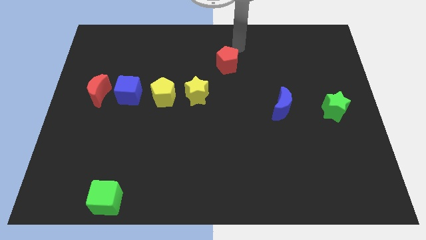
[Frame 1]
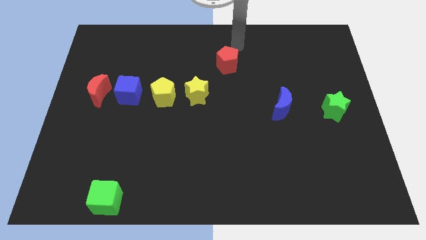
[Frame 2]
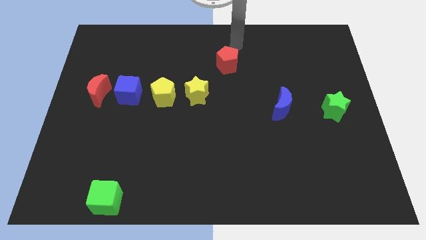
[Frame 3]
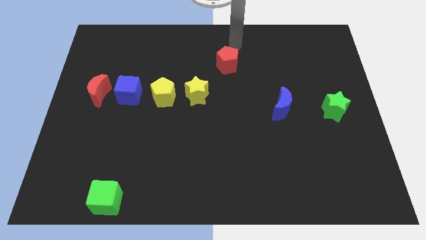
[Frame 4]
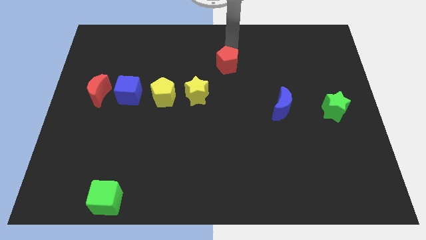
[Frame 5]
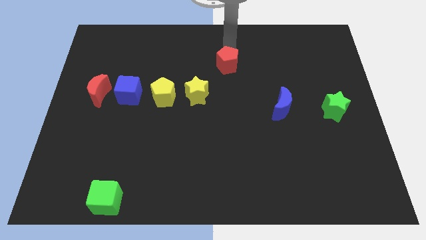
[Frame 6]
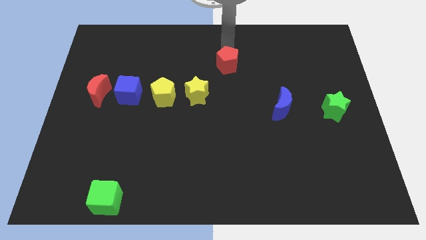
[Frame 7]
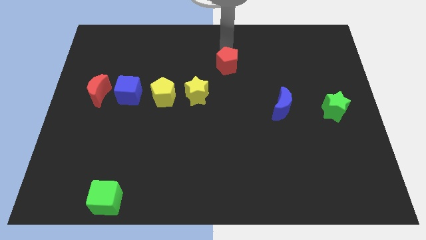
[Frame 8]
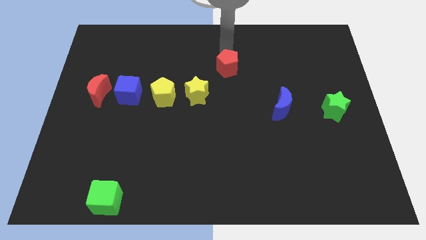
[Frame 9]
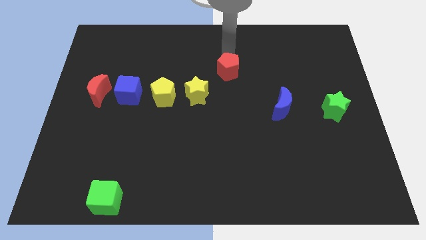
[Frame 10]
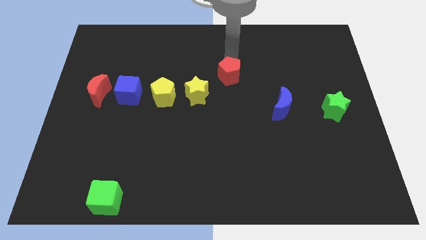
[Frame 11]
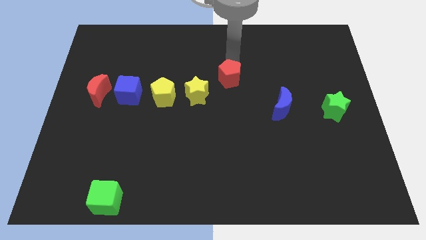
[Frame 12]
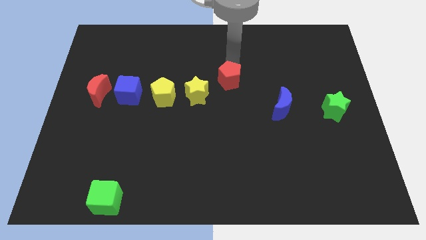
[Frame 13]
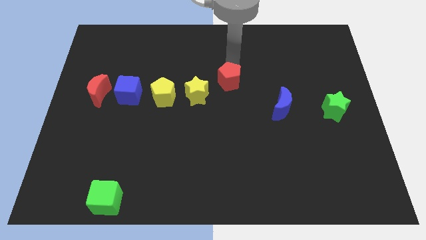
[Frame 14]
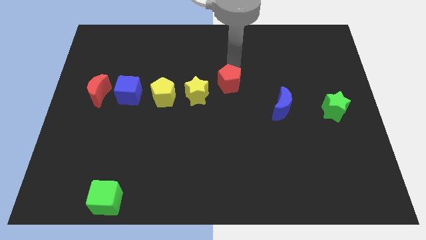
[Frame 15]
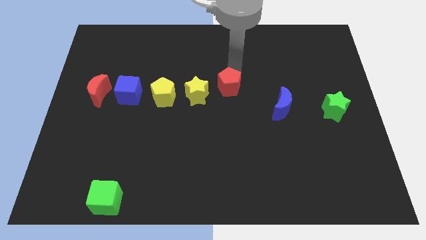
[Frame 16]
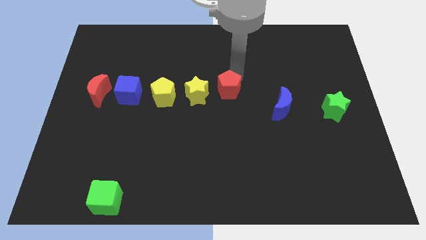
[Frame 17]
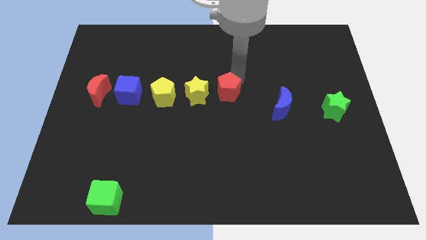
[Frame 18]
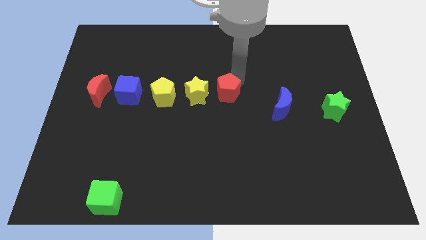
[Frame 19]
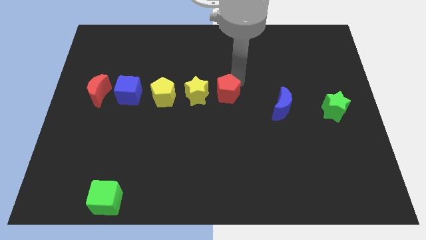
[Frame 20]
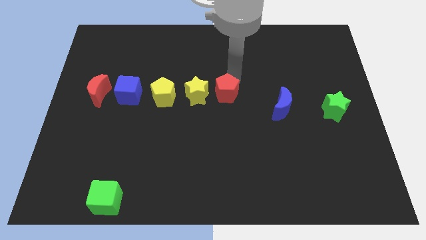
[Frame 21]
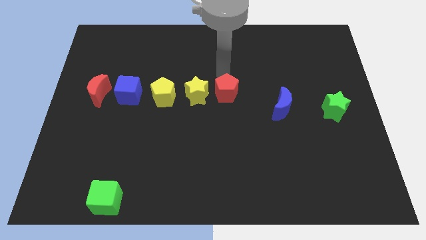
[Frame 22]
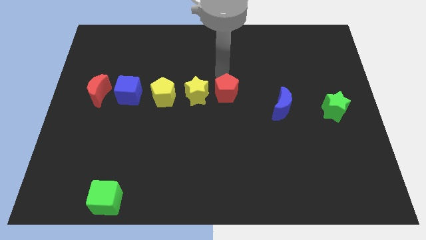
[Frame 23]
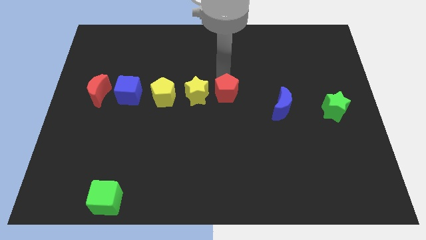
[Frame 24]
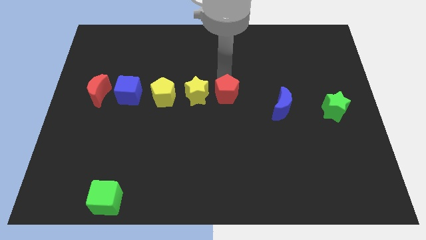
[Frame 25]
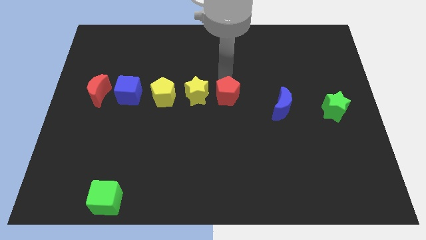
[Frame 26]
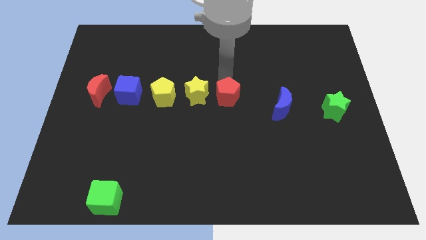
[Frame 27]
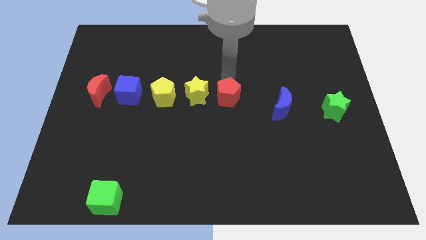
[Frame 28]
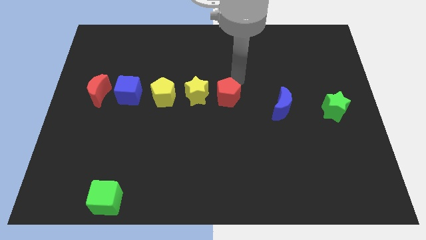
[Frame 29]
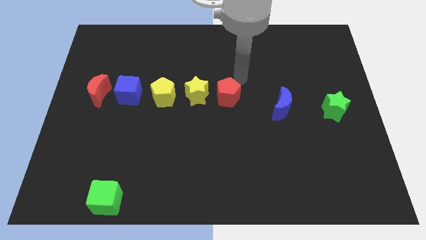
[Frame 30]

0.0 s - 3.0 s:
push the red pentagon at the center of the board

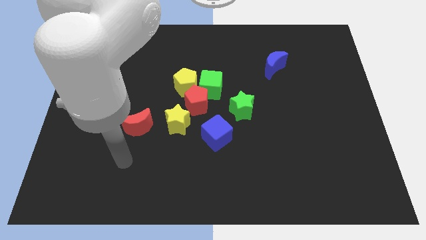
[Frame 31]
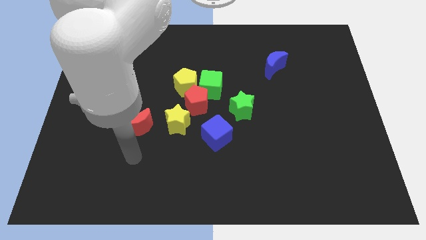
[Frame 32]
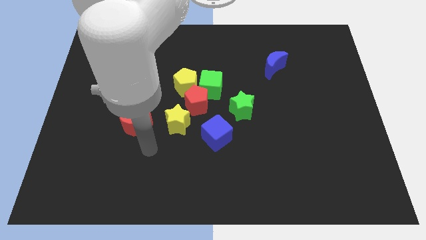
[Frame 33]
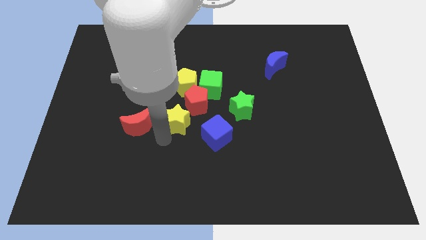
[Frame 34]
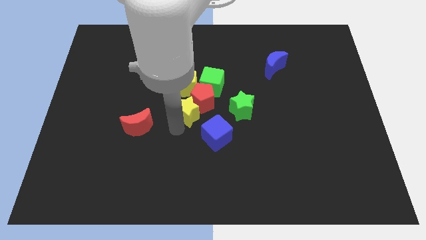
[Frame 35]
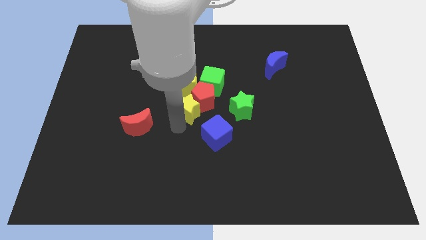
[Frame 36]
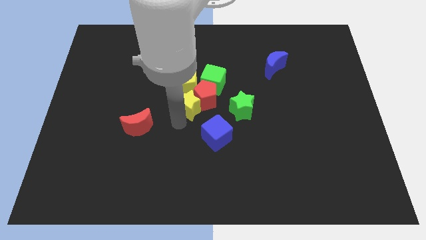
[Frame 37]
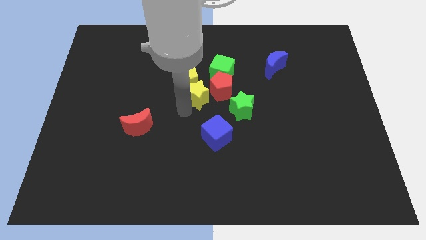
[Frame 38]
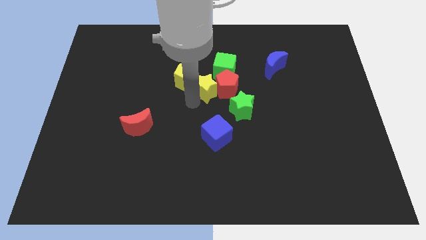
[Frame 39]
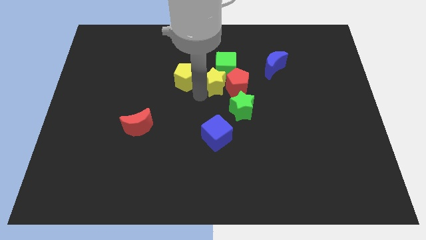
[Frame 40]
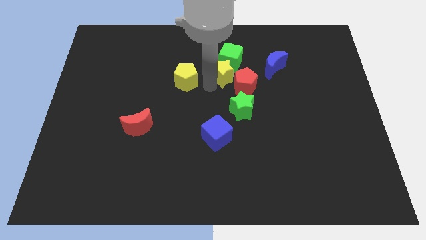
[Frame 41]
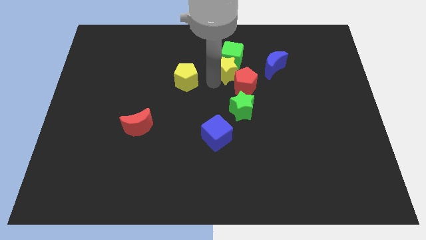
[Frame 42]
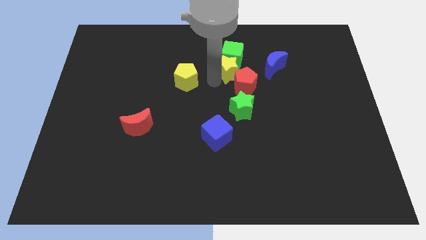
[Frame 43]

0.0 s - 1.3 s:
push the yellow star into the green ccube

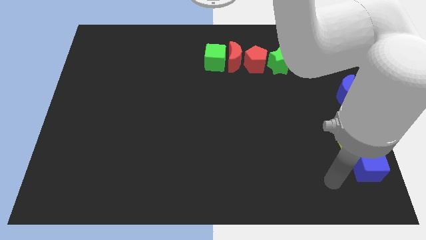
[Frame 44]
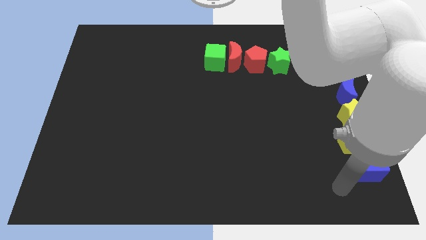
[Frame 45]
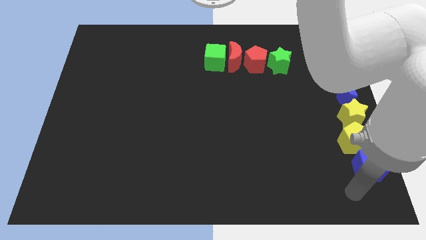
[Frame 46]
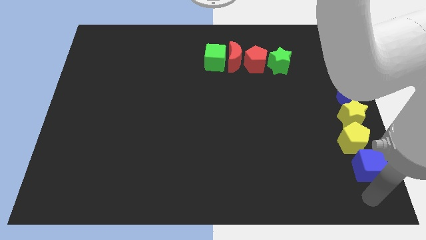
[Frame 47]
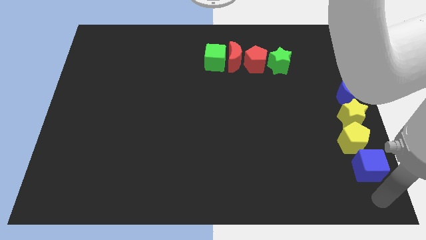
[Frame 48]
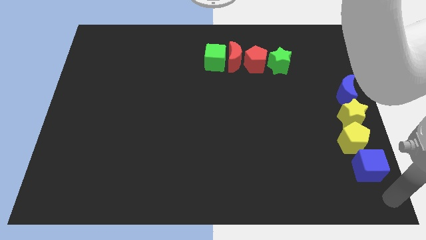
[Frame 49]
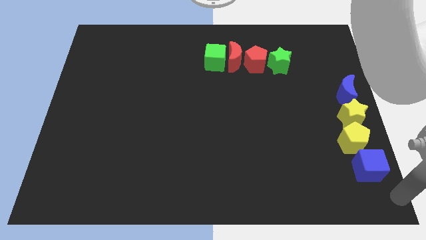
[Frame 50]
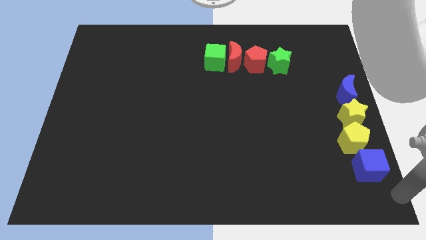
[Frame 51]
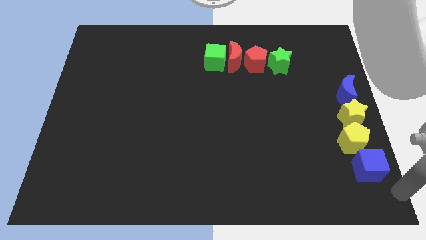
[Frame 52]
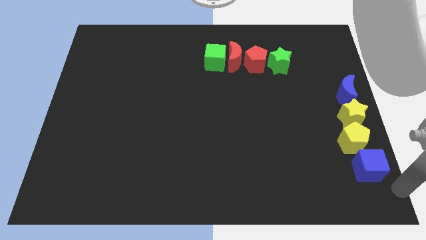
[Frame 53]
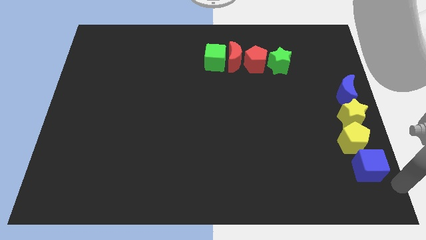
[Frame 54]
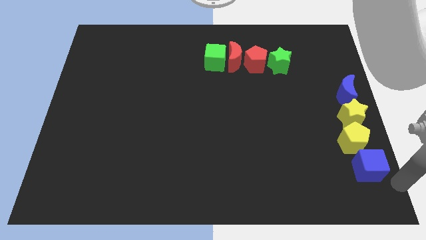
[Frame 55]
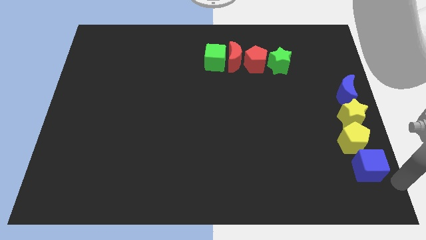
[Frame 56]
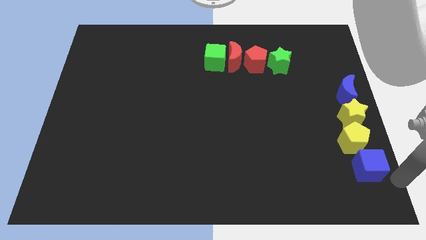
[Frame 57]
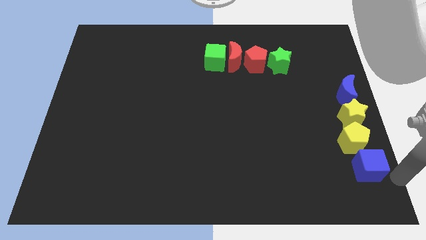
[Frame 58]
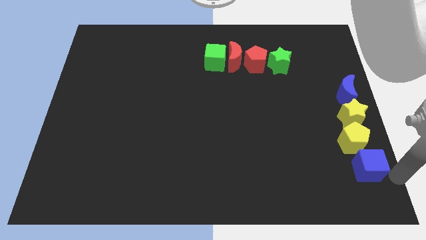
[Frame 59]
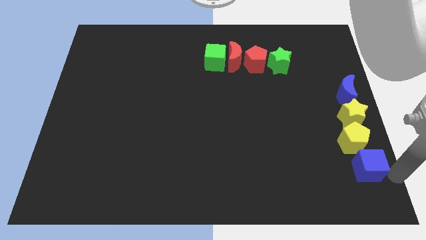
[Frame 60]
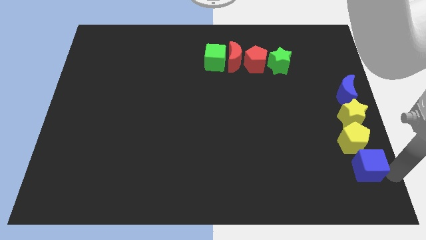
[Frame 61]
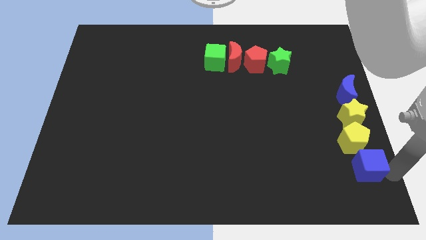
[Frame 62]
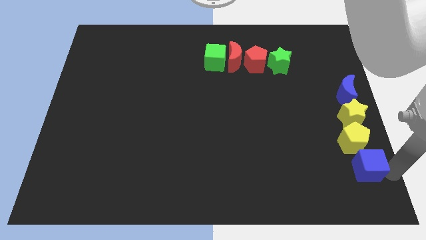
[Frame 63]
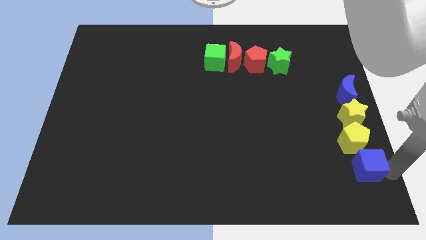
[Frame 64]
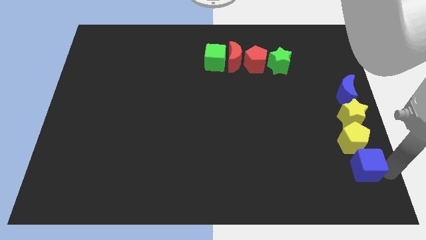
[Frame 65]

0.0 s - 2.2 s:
move the arm right to the blue cube

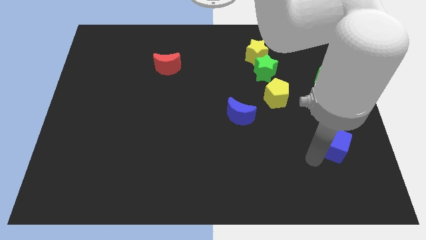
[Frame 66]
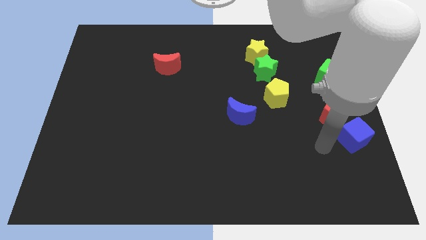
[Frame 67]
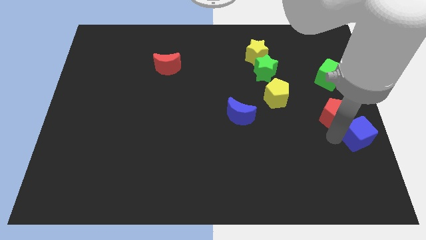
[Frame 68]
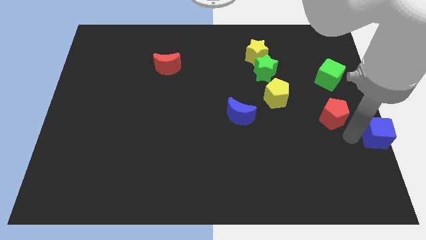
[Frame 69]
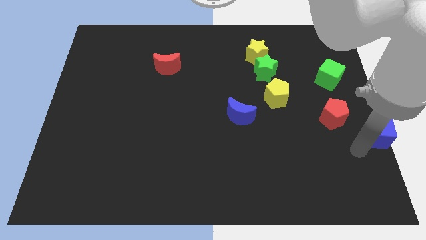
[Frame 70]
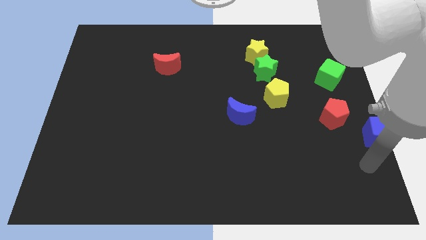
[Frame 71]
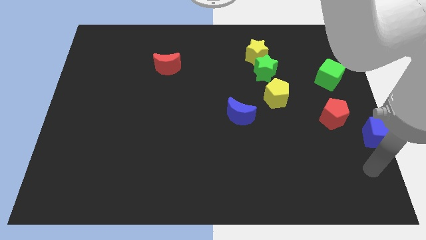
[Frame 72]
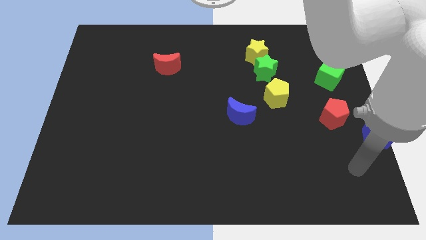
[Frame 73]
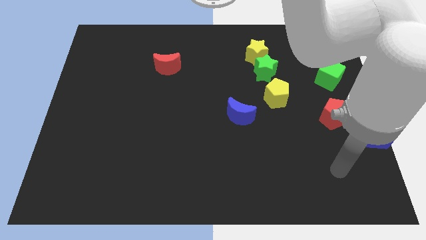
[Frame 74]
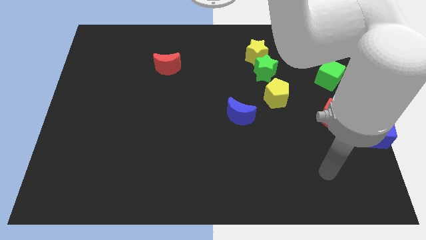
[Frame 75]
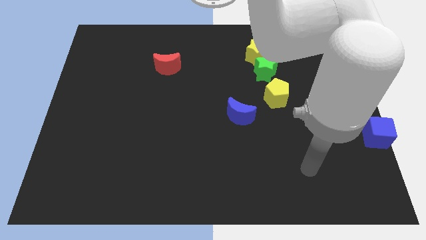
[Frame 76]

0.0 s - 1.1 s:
move the blue cube to the bottom right of the red pentagon

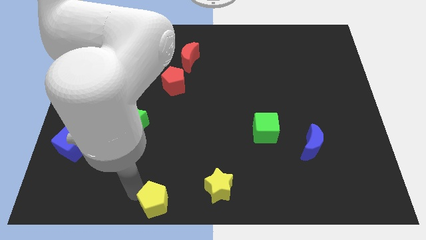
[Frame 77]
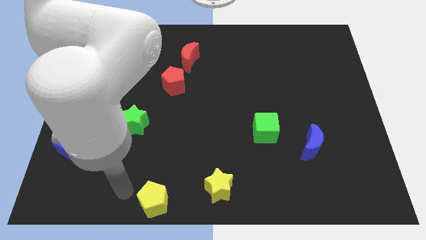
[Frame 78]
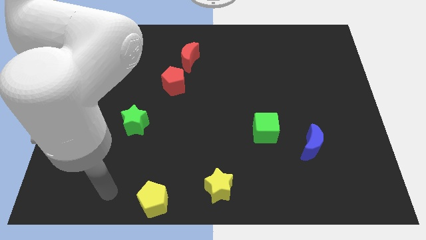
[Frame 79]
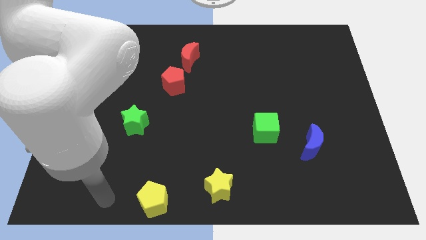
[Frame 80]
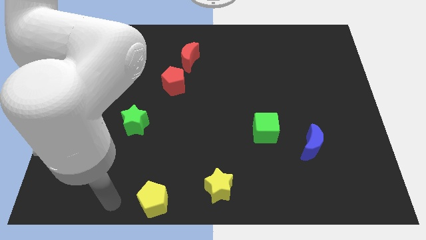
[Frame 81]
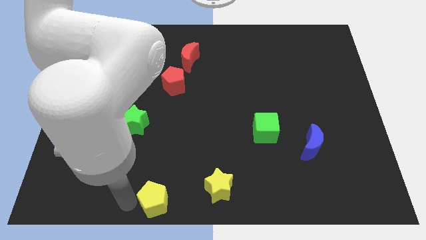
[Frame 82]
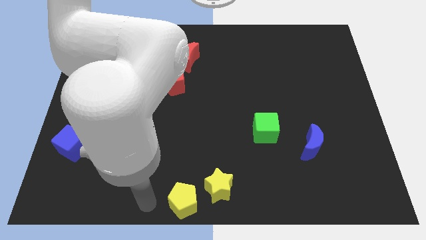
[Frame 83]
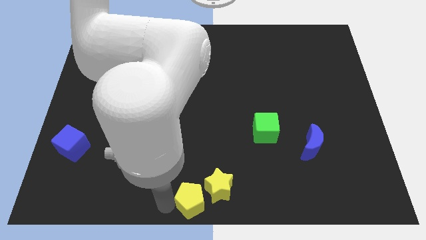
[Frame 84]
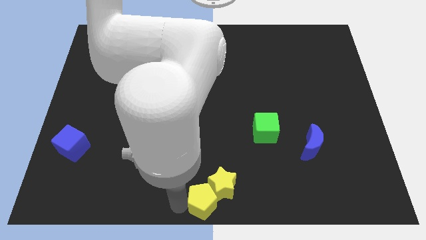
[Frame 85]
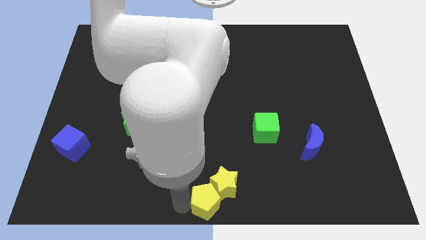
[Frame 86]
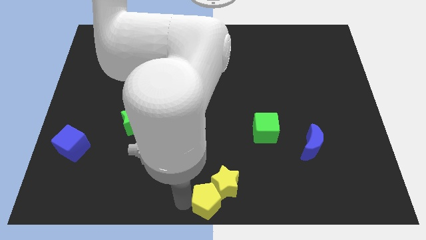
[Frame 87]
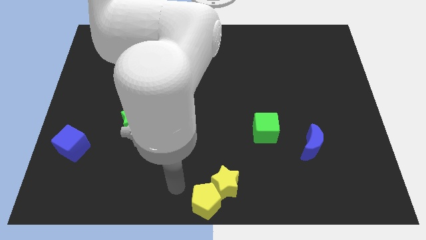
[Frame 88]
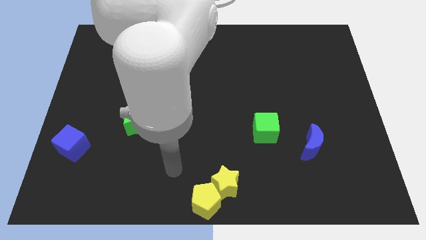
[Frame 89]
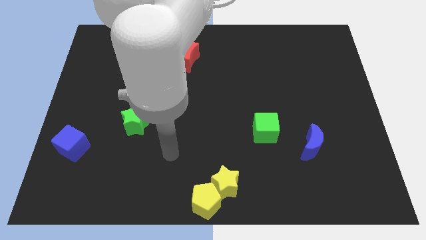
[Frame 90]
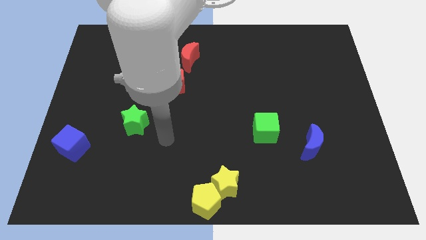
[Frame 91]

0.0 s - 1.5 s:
move yellow pentagon in to yellow star
